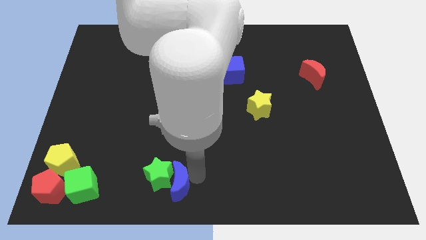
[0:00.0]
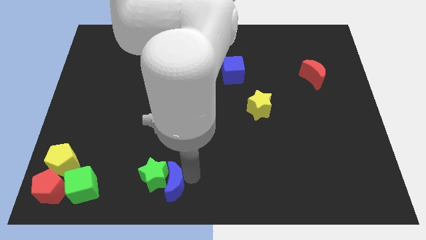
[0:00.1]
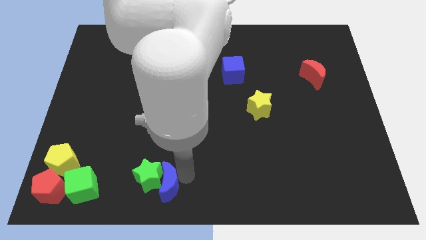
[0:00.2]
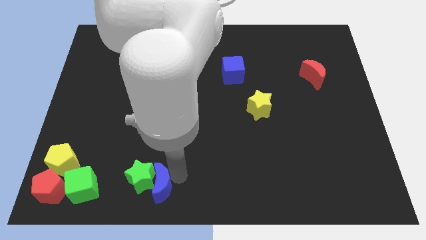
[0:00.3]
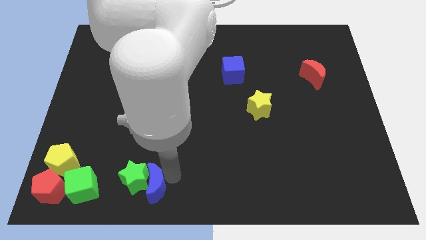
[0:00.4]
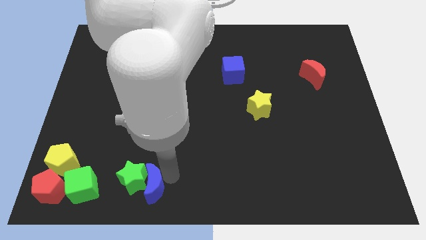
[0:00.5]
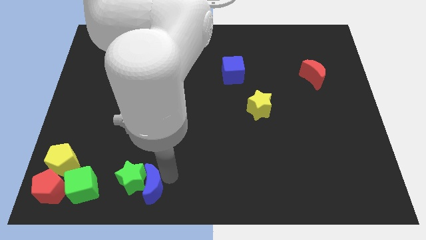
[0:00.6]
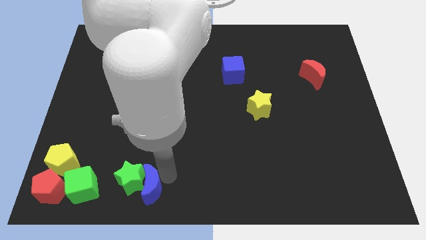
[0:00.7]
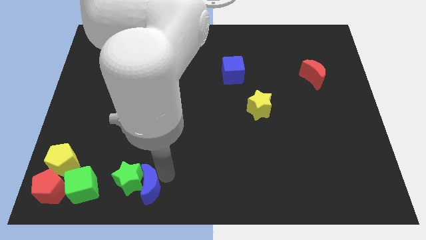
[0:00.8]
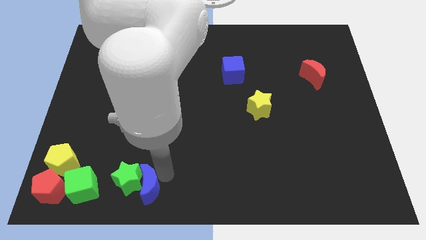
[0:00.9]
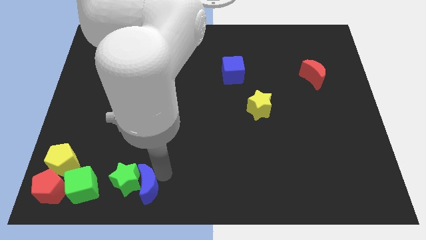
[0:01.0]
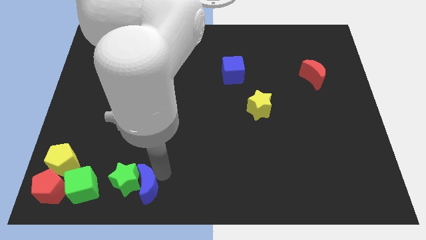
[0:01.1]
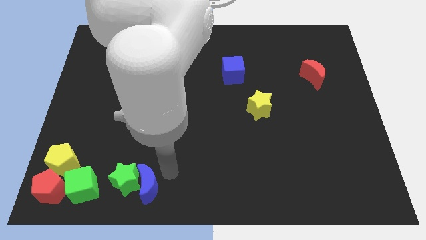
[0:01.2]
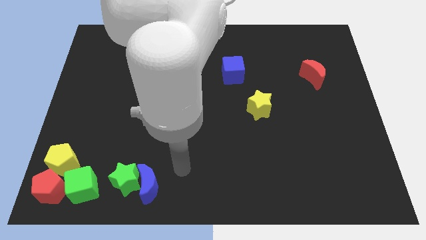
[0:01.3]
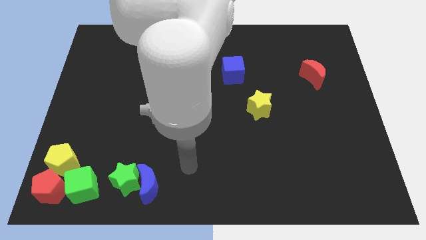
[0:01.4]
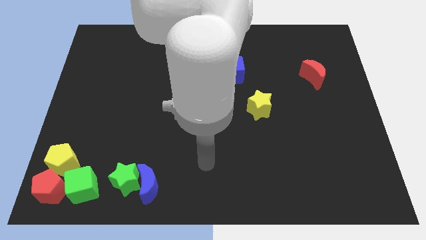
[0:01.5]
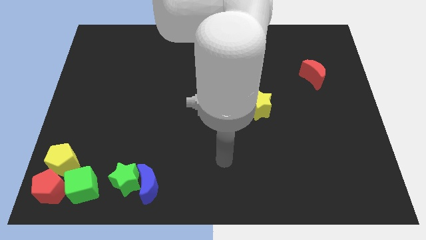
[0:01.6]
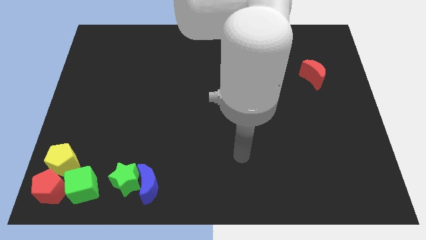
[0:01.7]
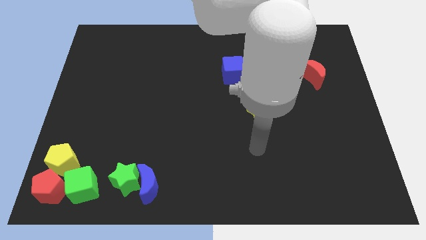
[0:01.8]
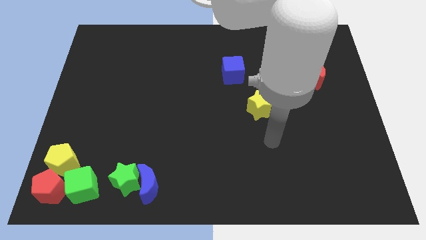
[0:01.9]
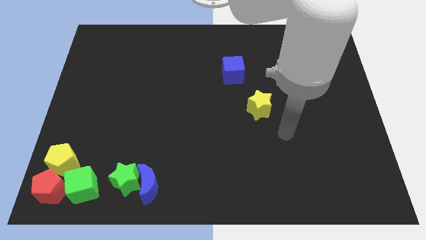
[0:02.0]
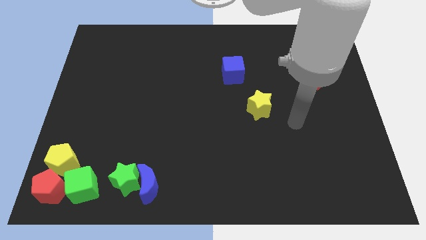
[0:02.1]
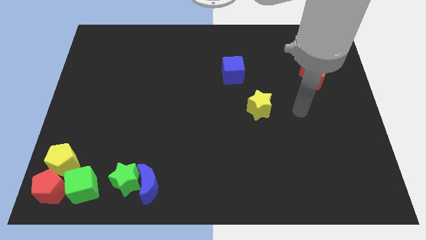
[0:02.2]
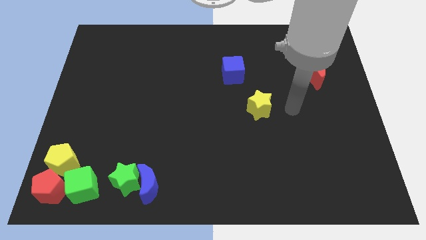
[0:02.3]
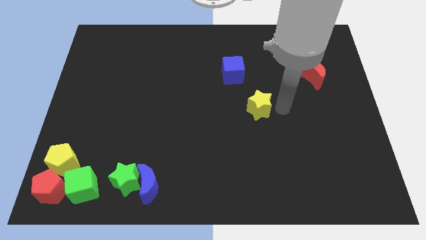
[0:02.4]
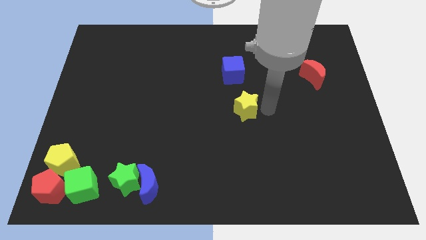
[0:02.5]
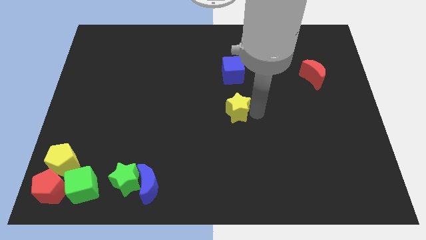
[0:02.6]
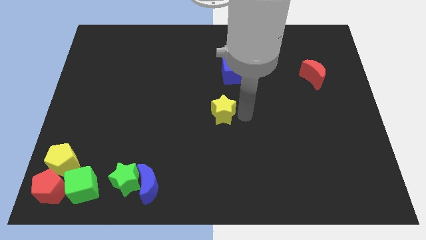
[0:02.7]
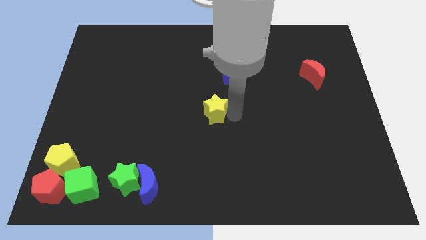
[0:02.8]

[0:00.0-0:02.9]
move yellow star slightly to the left

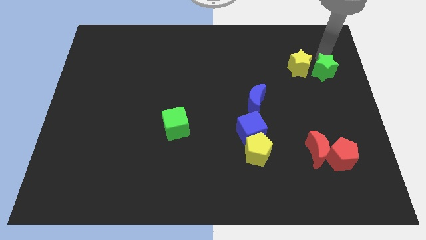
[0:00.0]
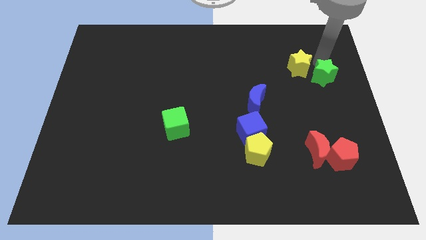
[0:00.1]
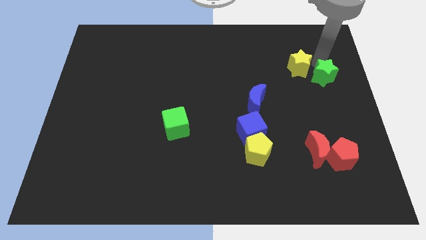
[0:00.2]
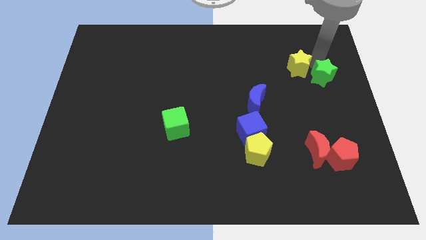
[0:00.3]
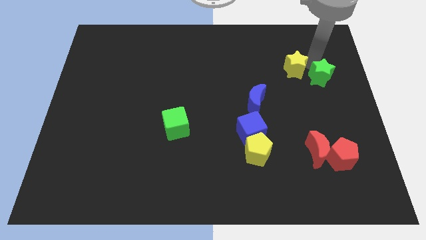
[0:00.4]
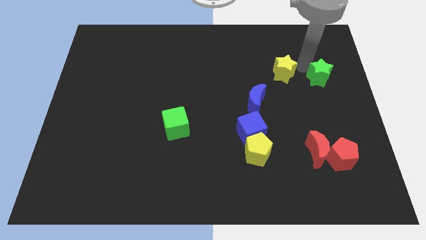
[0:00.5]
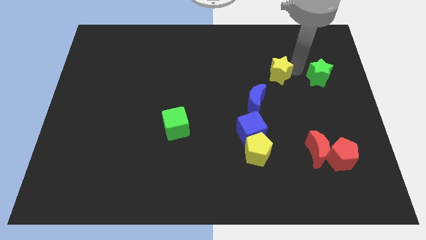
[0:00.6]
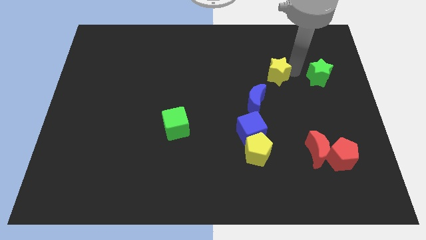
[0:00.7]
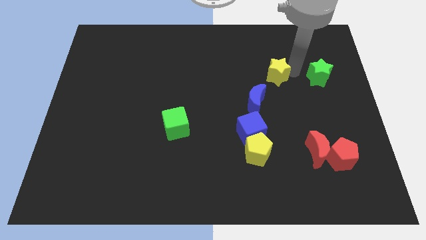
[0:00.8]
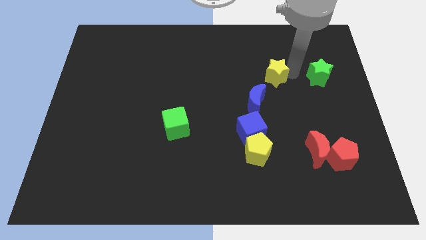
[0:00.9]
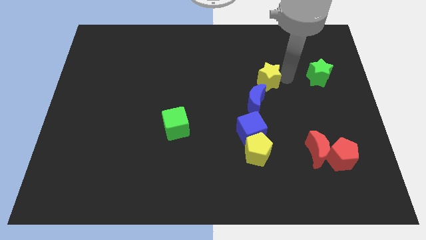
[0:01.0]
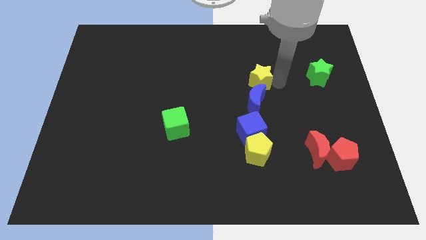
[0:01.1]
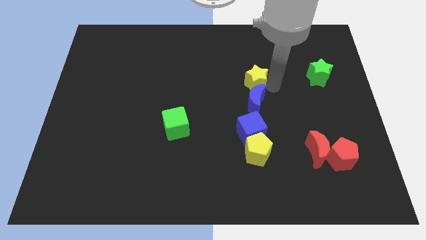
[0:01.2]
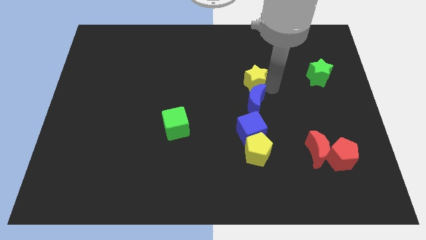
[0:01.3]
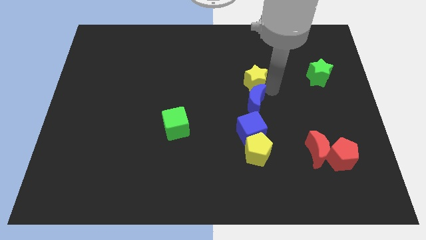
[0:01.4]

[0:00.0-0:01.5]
push the yellow star to the top side of the blue crescent

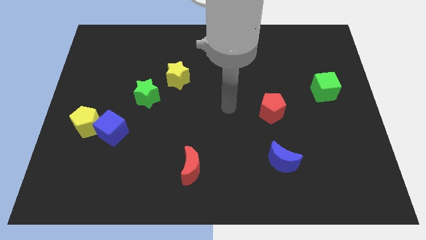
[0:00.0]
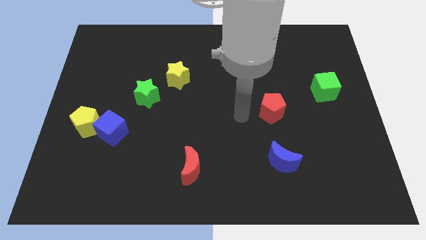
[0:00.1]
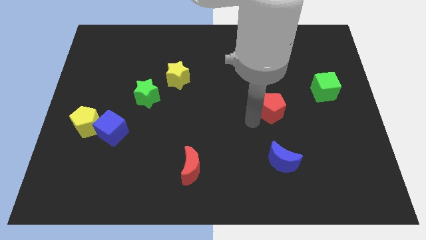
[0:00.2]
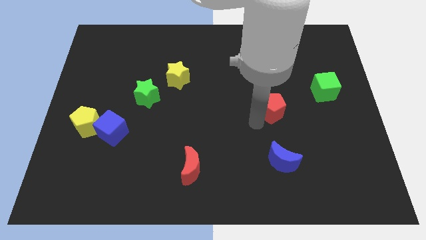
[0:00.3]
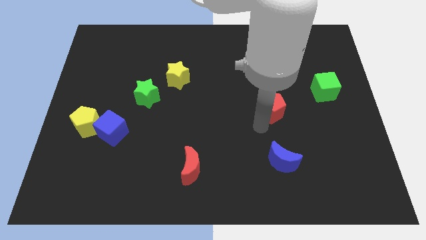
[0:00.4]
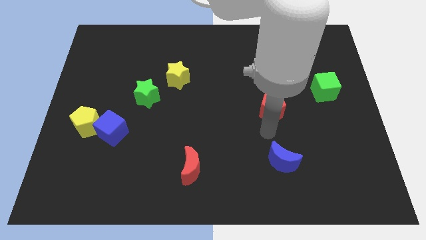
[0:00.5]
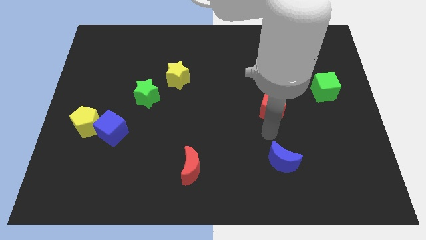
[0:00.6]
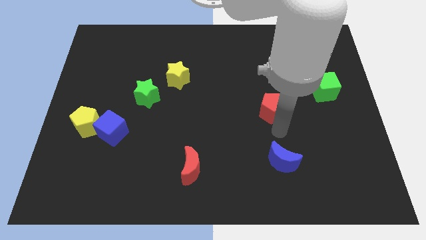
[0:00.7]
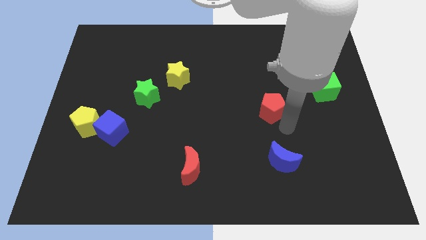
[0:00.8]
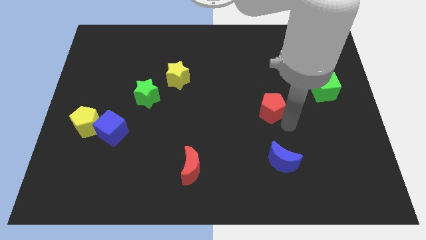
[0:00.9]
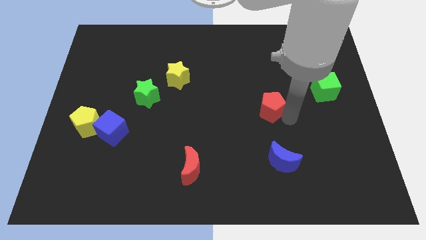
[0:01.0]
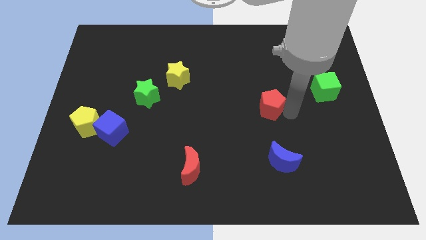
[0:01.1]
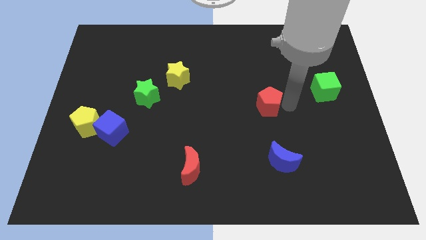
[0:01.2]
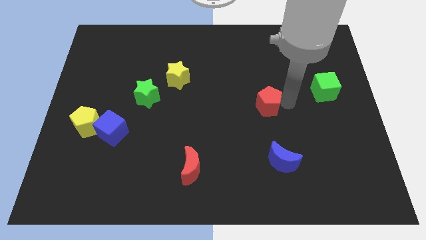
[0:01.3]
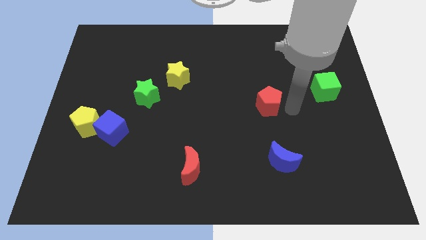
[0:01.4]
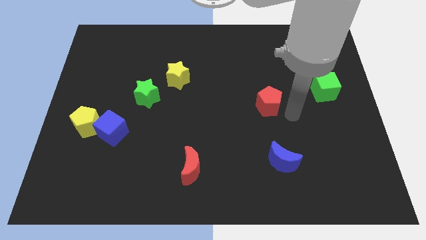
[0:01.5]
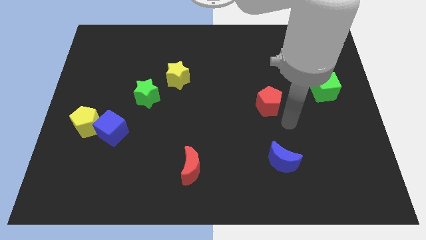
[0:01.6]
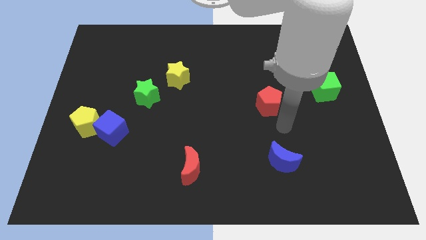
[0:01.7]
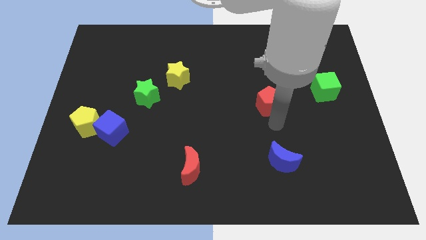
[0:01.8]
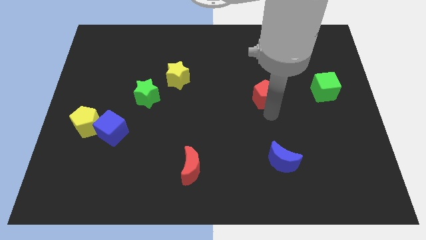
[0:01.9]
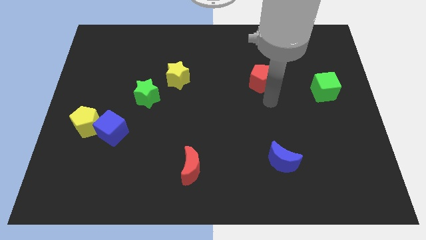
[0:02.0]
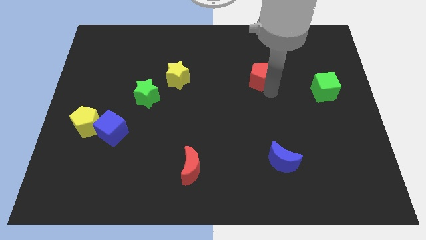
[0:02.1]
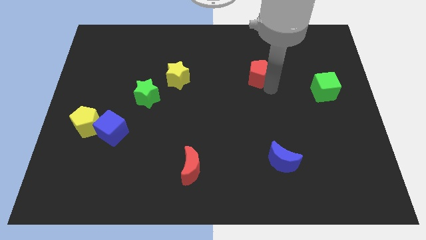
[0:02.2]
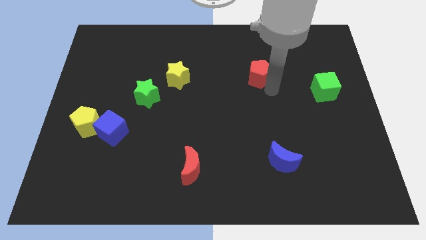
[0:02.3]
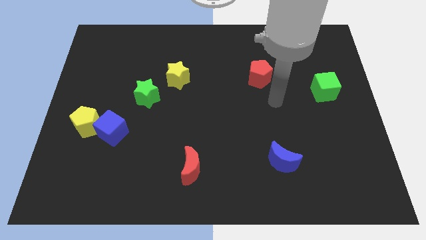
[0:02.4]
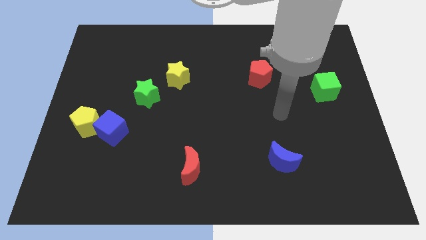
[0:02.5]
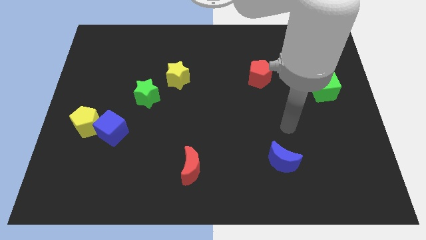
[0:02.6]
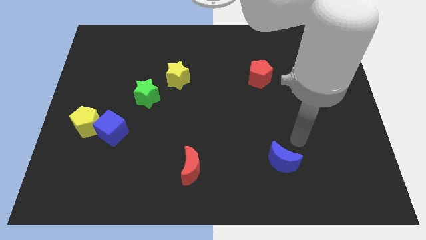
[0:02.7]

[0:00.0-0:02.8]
place the red pentagon to the right of yellow star

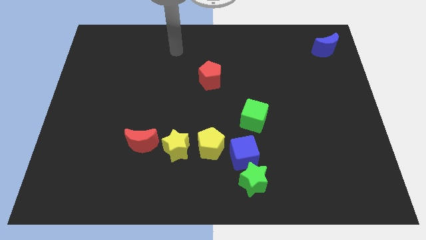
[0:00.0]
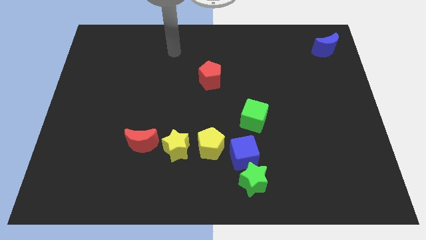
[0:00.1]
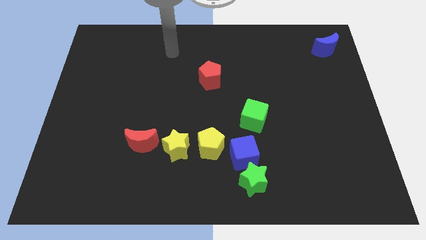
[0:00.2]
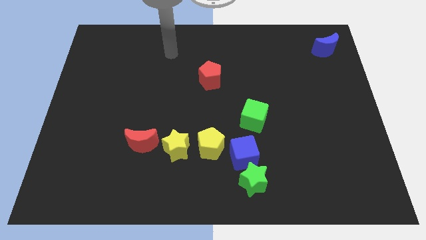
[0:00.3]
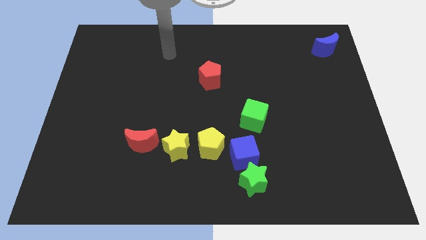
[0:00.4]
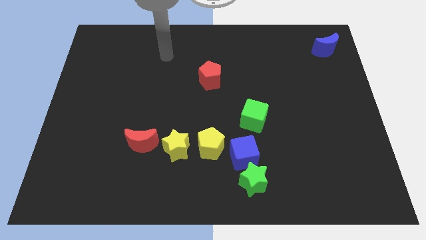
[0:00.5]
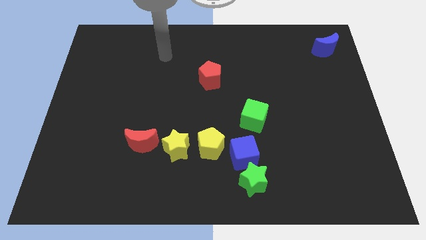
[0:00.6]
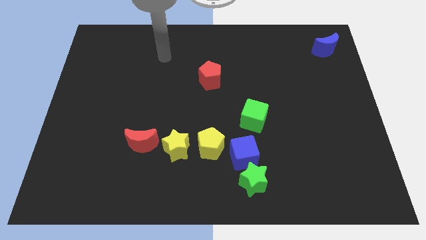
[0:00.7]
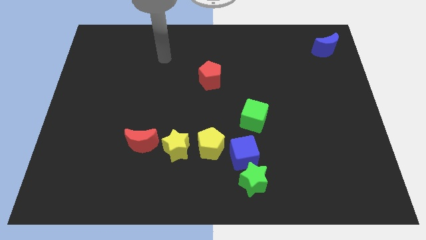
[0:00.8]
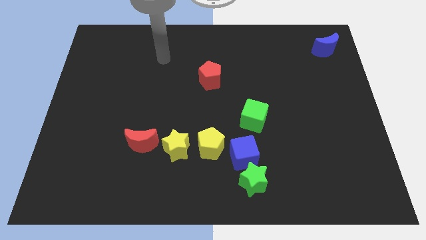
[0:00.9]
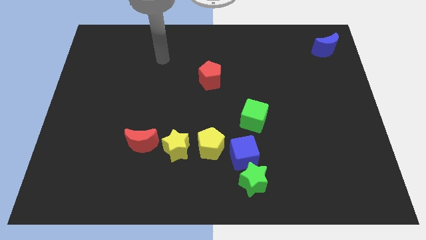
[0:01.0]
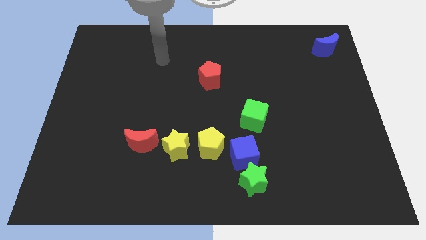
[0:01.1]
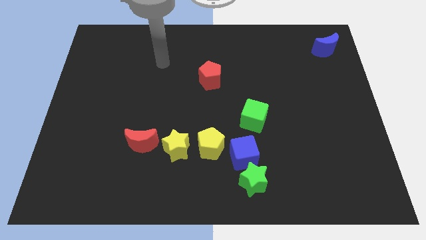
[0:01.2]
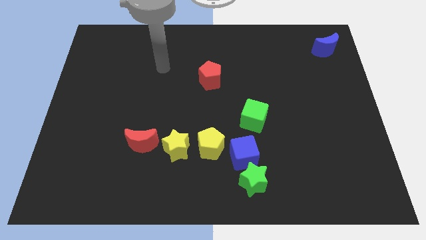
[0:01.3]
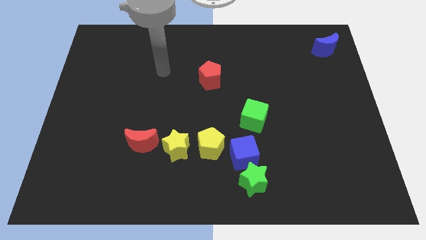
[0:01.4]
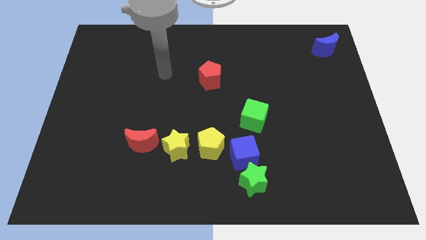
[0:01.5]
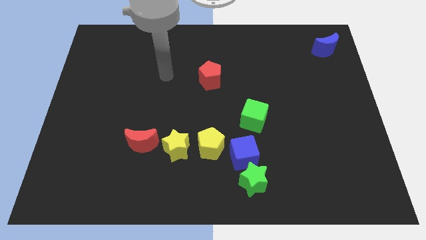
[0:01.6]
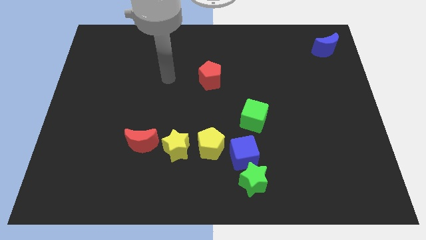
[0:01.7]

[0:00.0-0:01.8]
put arm on the left side of red pentagon
